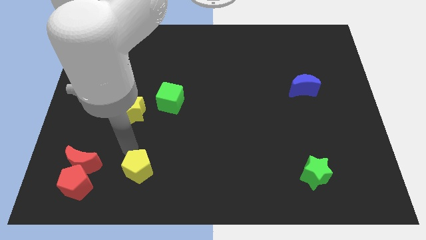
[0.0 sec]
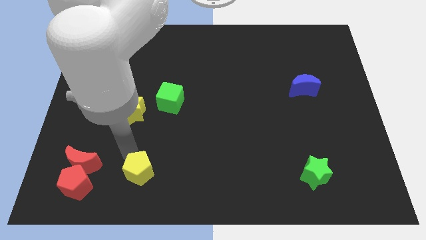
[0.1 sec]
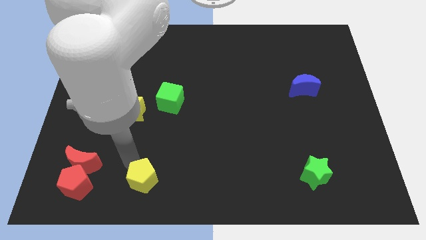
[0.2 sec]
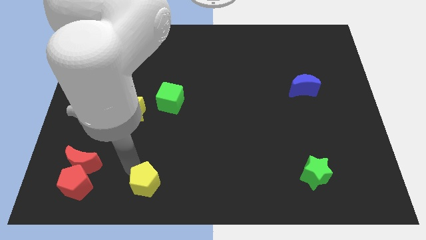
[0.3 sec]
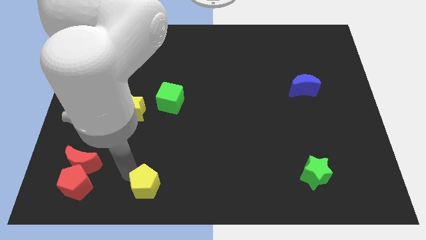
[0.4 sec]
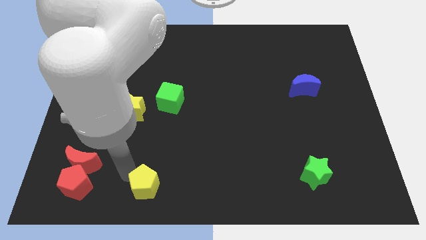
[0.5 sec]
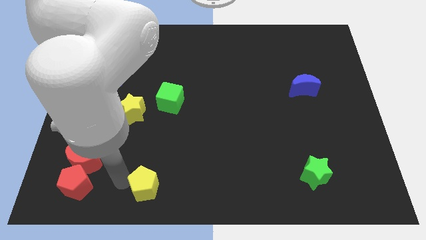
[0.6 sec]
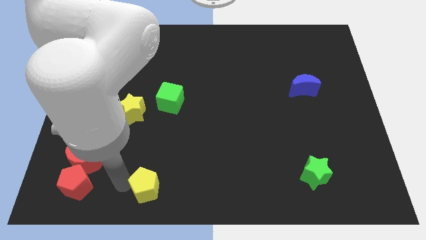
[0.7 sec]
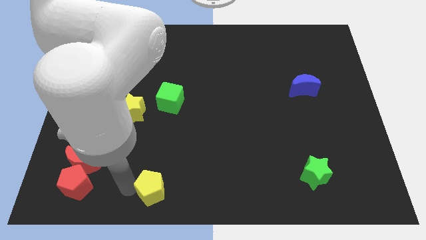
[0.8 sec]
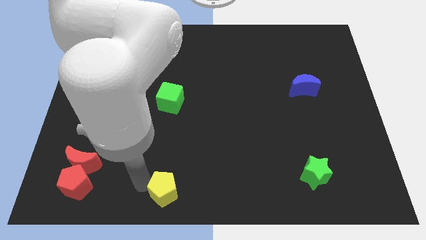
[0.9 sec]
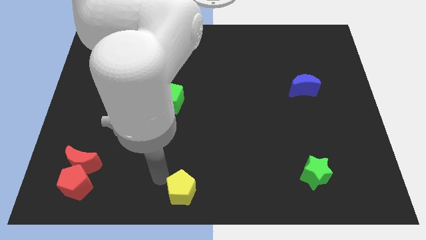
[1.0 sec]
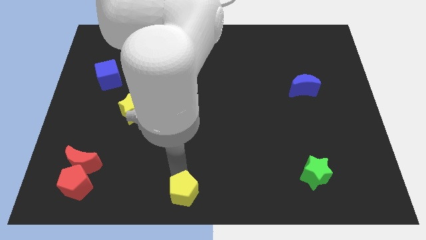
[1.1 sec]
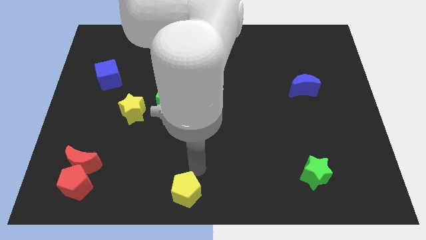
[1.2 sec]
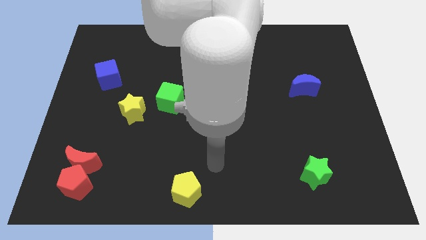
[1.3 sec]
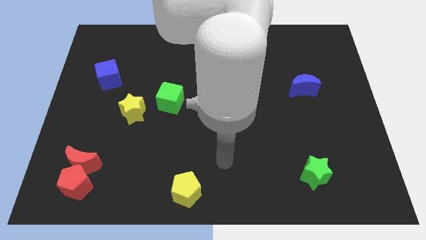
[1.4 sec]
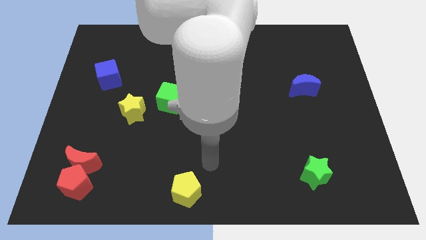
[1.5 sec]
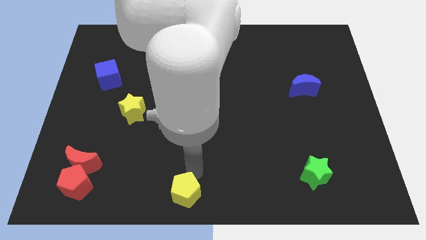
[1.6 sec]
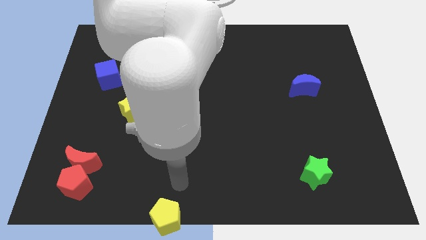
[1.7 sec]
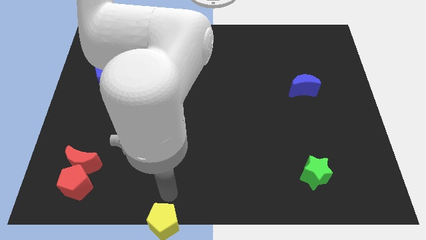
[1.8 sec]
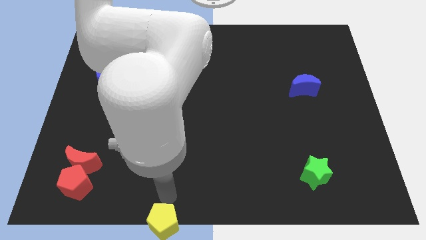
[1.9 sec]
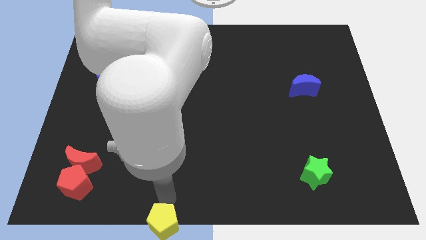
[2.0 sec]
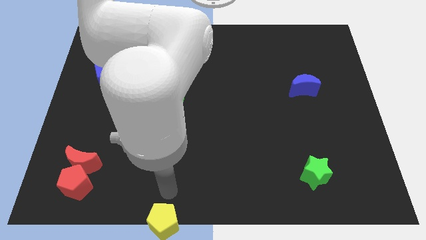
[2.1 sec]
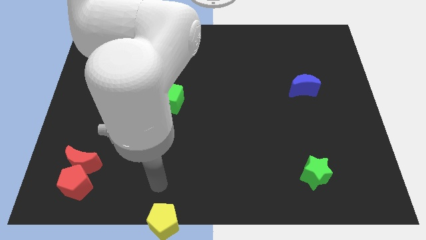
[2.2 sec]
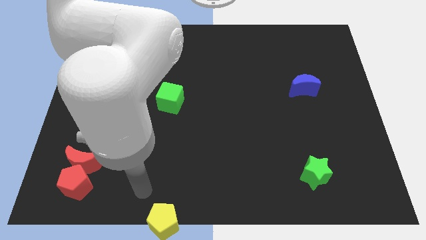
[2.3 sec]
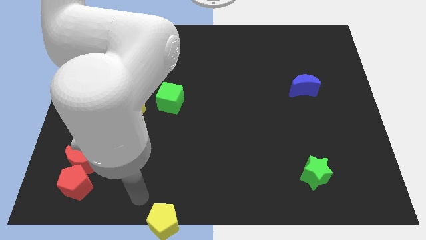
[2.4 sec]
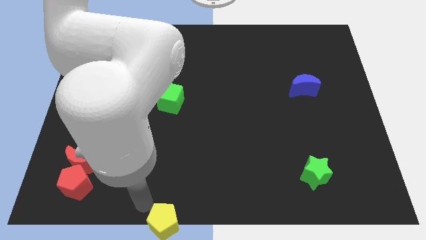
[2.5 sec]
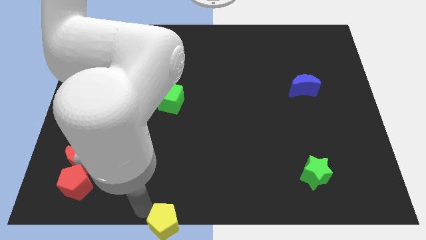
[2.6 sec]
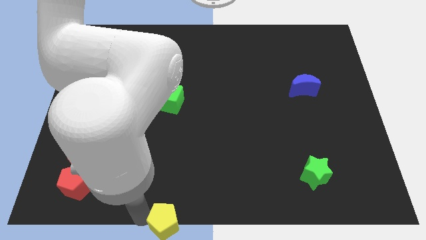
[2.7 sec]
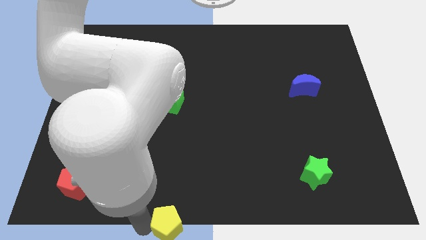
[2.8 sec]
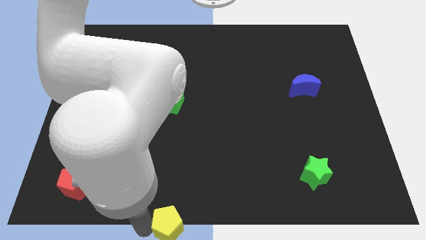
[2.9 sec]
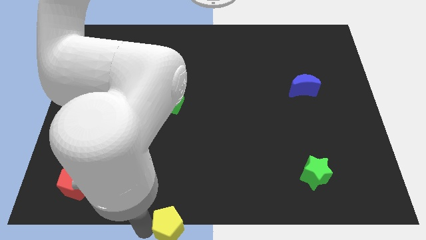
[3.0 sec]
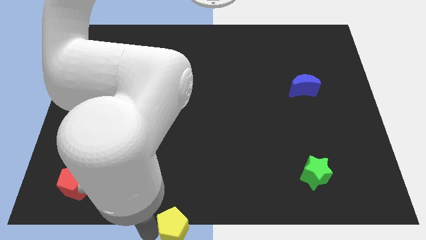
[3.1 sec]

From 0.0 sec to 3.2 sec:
place the yellow pentagon at the bottom center of the board

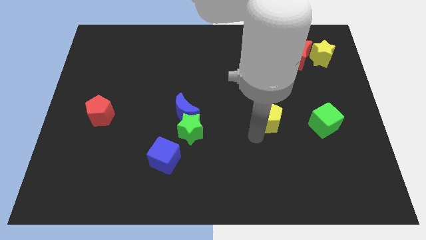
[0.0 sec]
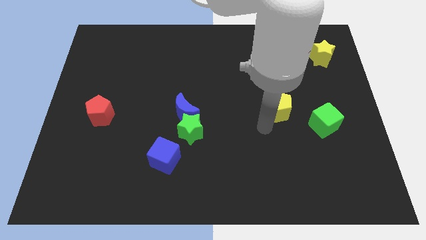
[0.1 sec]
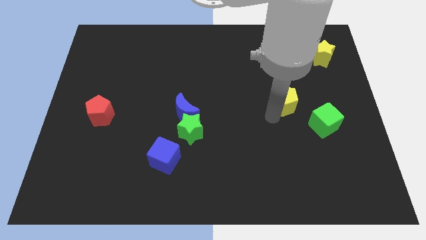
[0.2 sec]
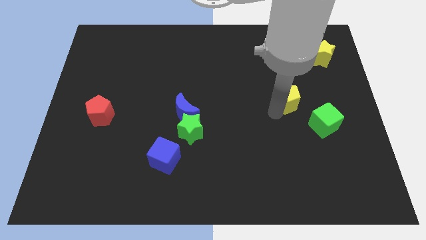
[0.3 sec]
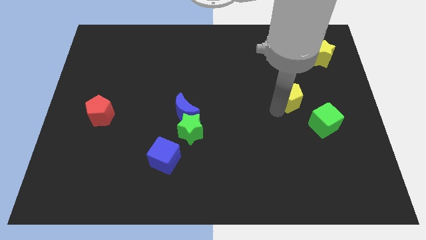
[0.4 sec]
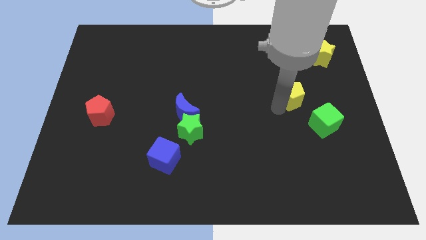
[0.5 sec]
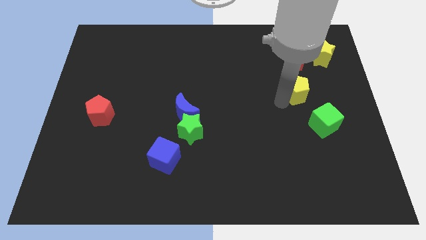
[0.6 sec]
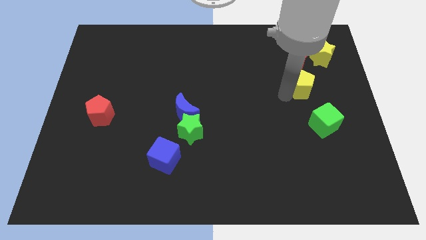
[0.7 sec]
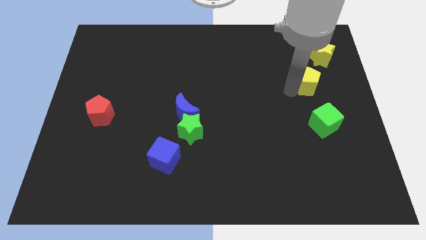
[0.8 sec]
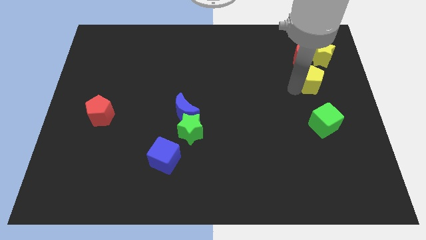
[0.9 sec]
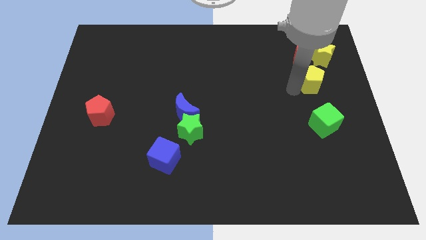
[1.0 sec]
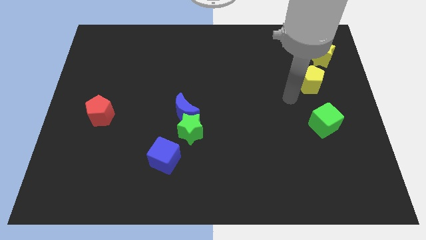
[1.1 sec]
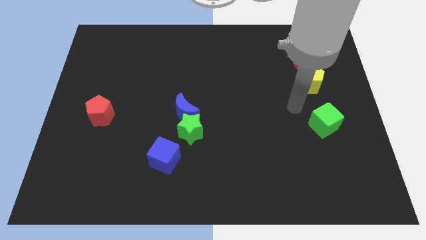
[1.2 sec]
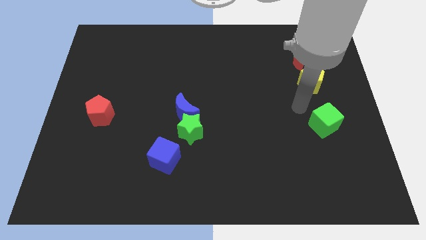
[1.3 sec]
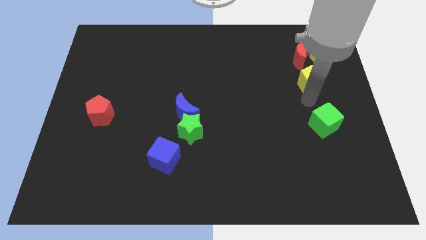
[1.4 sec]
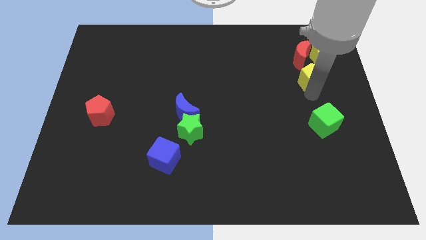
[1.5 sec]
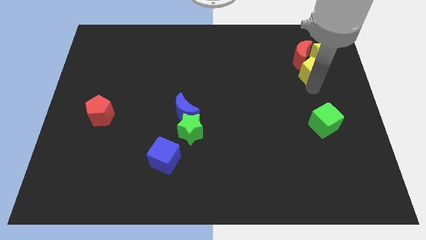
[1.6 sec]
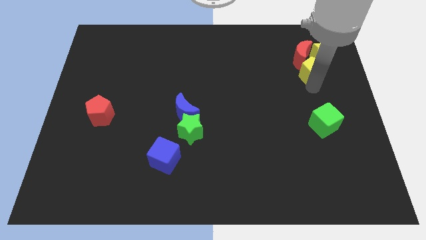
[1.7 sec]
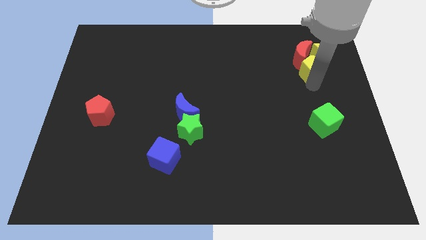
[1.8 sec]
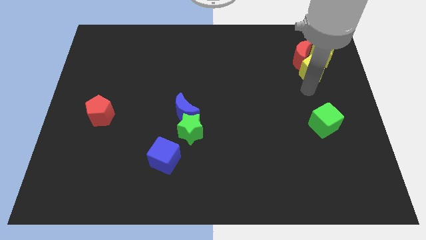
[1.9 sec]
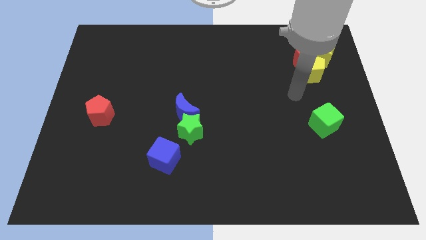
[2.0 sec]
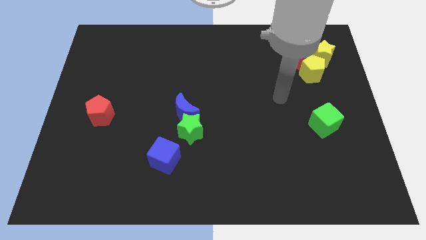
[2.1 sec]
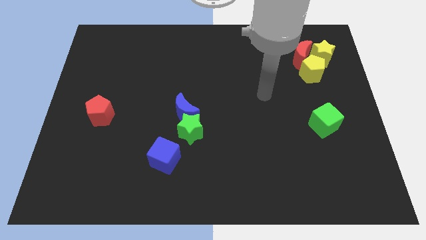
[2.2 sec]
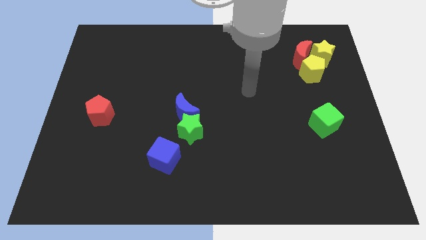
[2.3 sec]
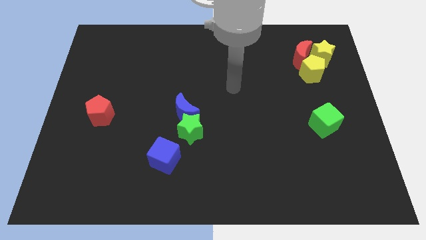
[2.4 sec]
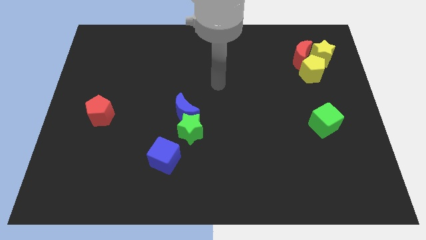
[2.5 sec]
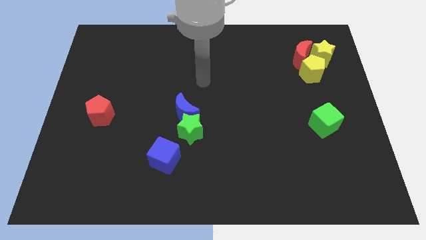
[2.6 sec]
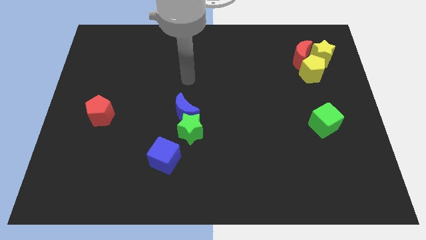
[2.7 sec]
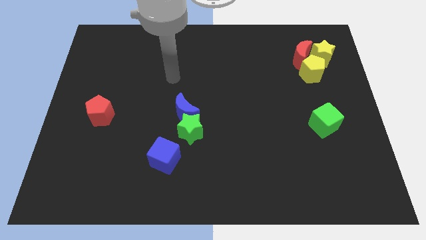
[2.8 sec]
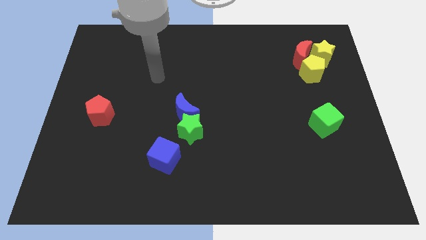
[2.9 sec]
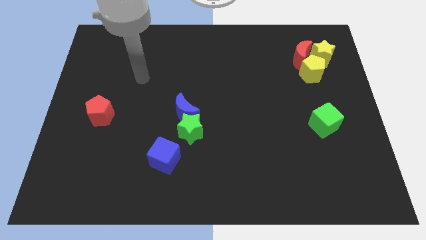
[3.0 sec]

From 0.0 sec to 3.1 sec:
push the yellow pentagon near to the red crescent and yellow star

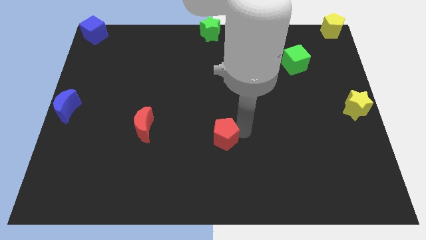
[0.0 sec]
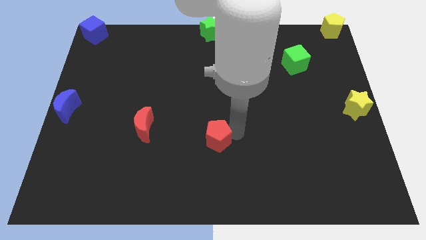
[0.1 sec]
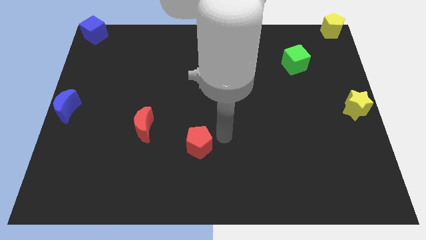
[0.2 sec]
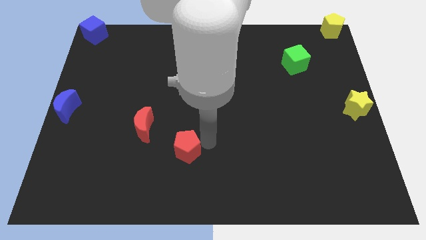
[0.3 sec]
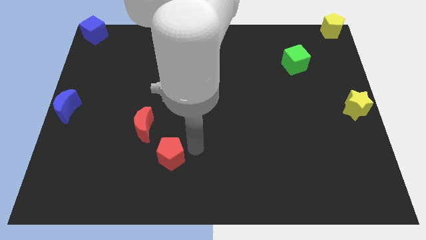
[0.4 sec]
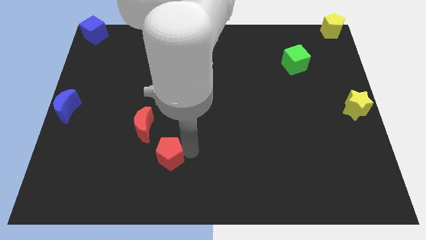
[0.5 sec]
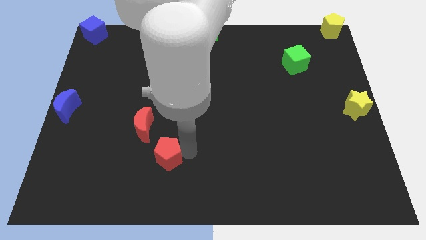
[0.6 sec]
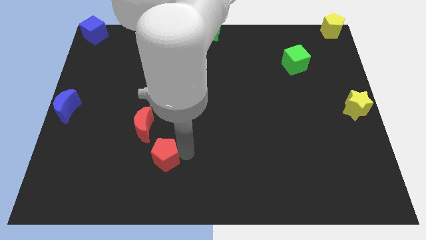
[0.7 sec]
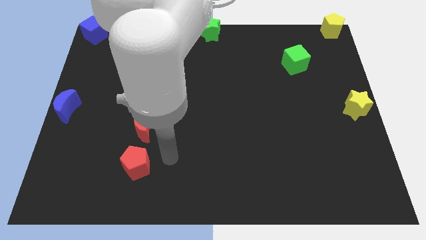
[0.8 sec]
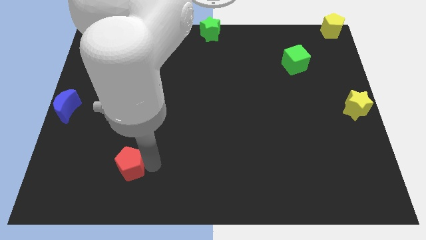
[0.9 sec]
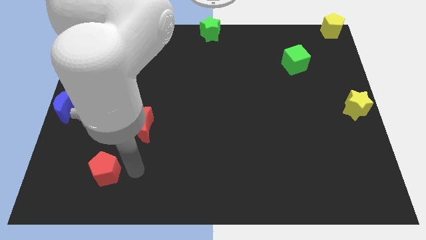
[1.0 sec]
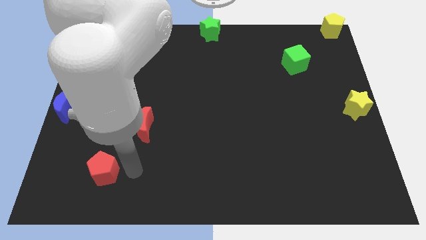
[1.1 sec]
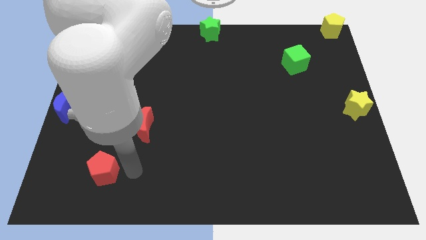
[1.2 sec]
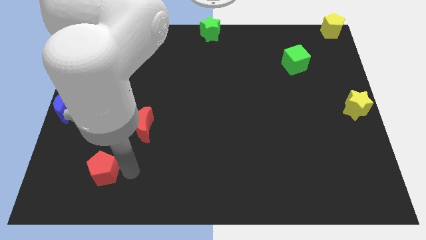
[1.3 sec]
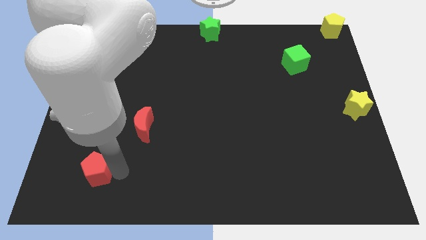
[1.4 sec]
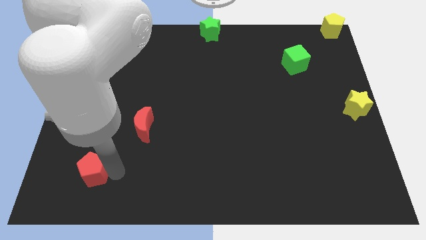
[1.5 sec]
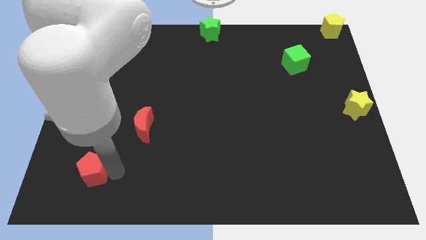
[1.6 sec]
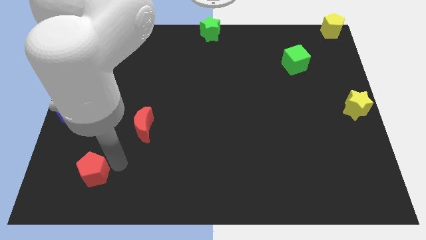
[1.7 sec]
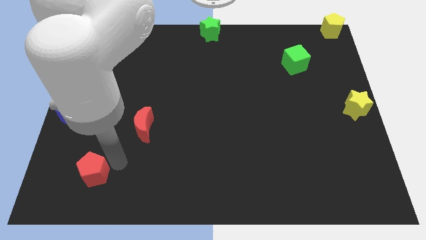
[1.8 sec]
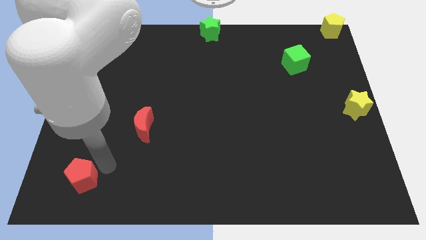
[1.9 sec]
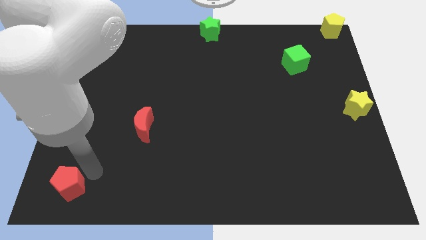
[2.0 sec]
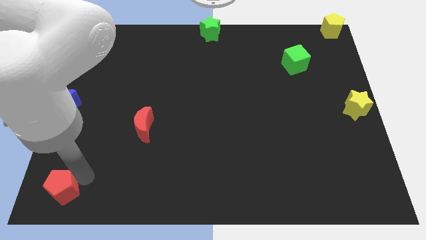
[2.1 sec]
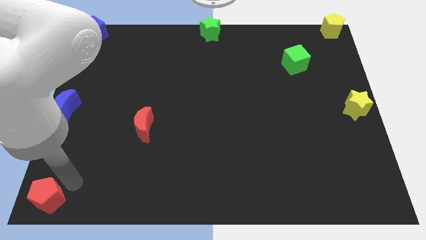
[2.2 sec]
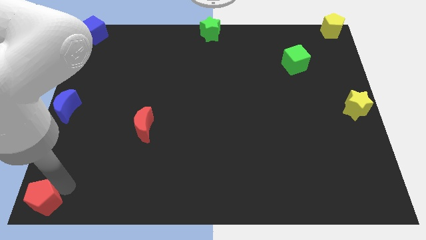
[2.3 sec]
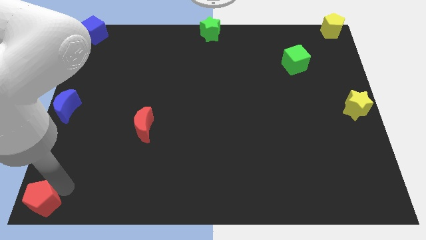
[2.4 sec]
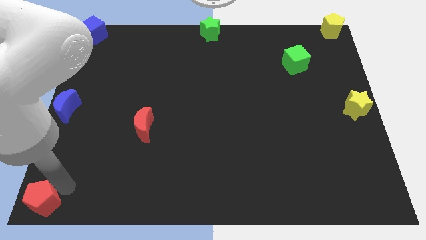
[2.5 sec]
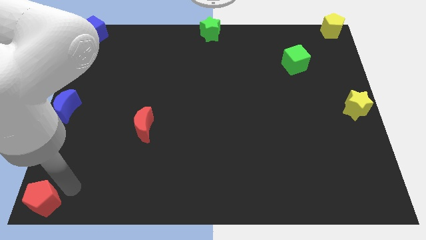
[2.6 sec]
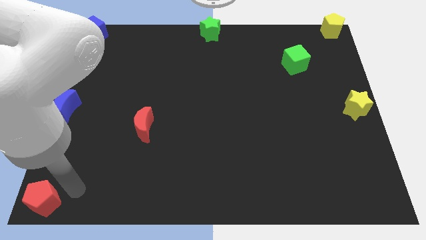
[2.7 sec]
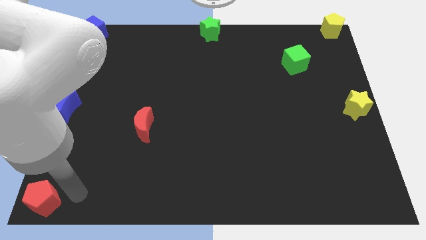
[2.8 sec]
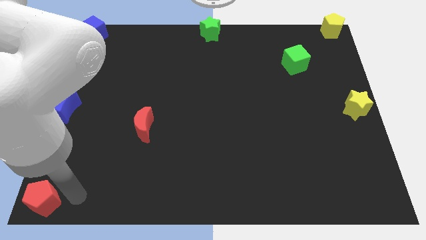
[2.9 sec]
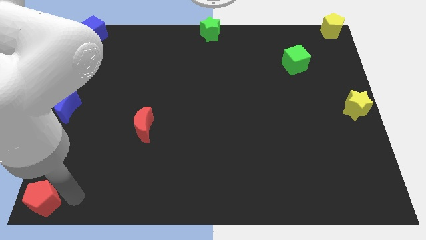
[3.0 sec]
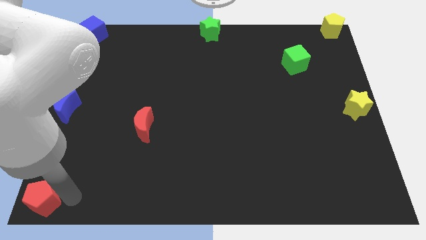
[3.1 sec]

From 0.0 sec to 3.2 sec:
push red pentagon towards bottom left side of the board
